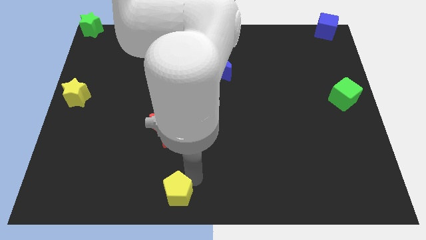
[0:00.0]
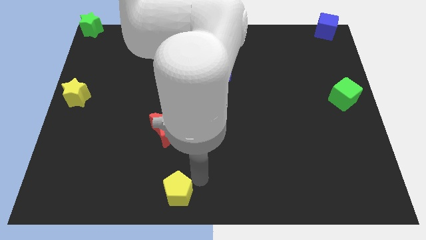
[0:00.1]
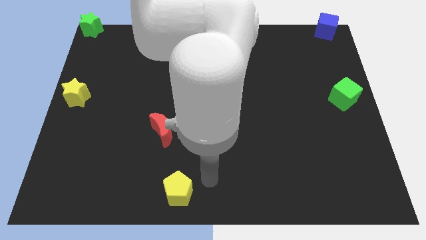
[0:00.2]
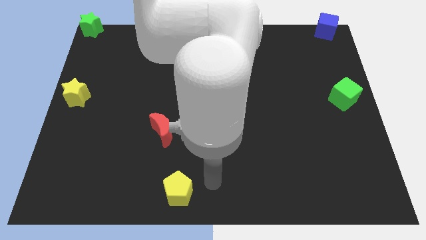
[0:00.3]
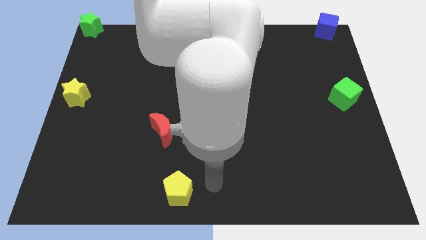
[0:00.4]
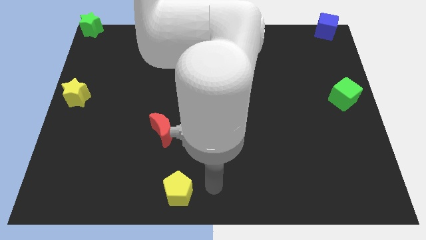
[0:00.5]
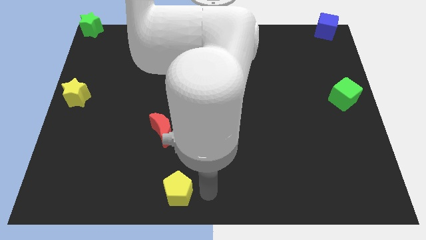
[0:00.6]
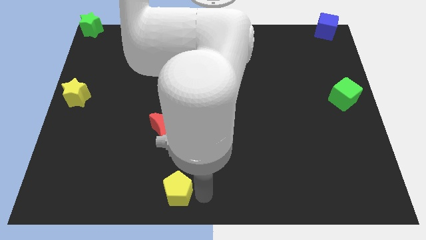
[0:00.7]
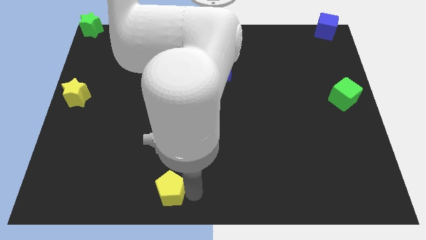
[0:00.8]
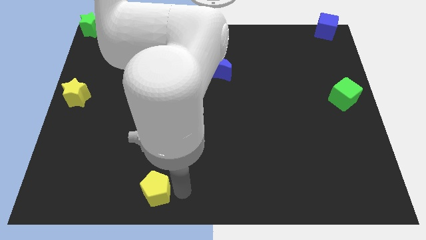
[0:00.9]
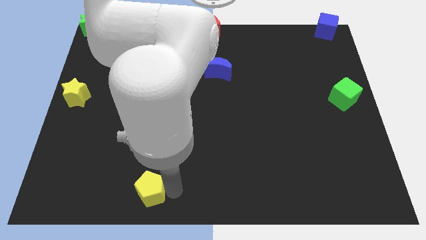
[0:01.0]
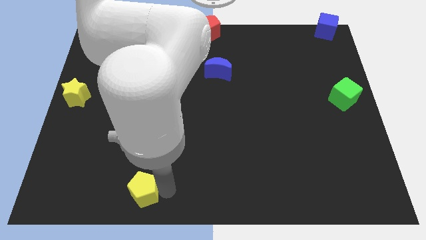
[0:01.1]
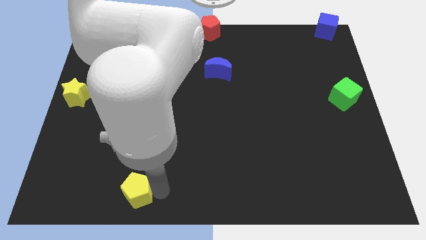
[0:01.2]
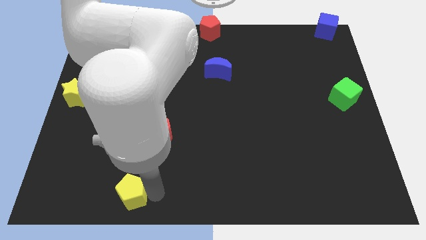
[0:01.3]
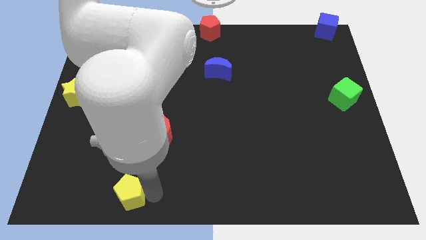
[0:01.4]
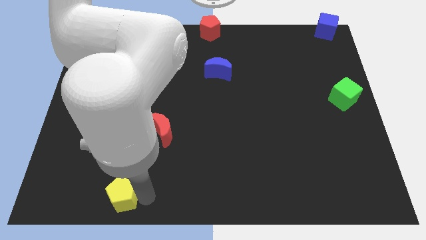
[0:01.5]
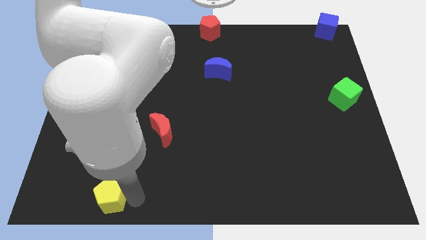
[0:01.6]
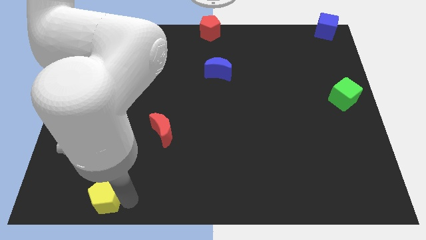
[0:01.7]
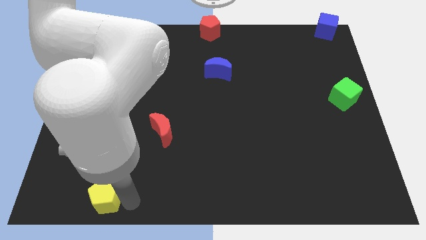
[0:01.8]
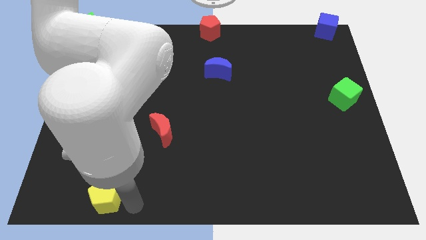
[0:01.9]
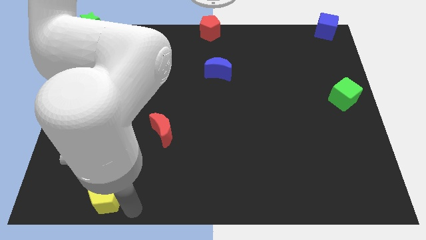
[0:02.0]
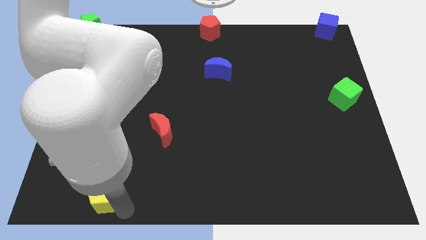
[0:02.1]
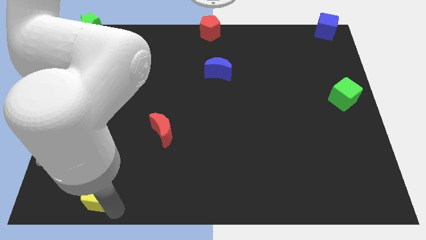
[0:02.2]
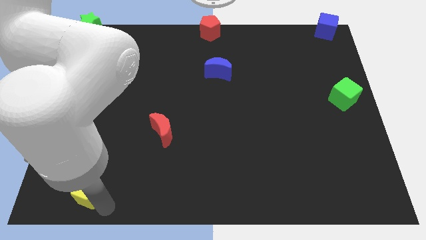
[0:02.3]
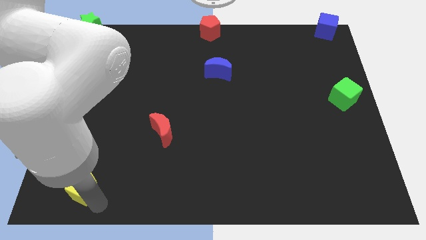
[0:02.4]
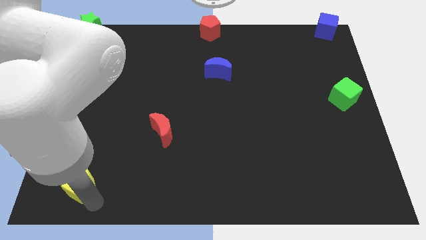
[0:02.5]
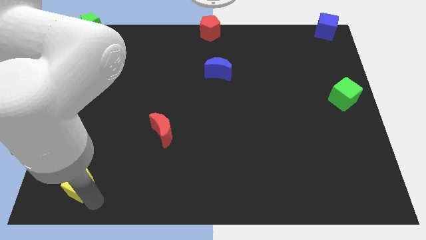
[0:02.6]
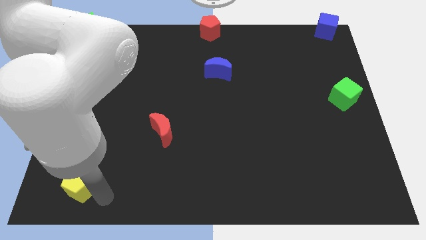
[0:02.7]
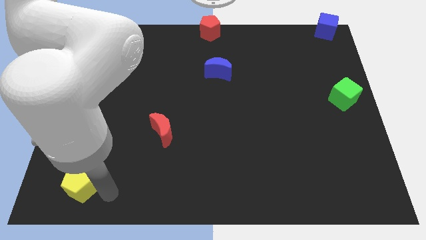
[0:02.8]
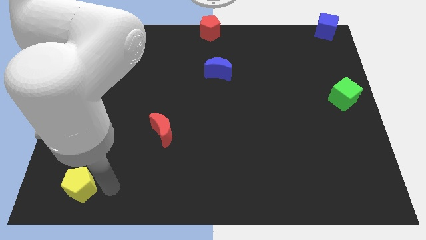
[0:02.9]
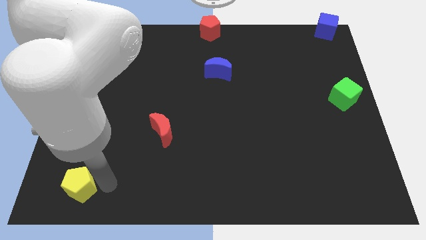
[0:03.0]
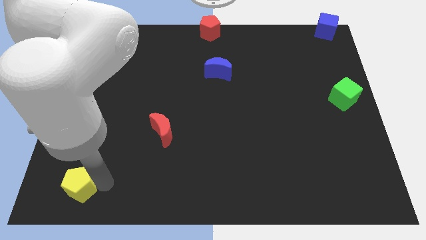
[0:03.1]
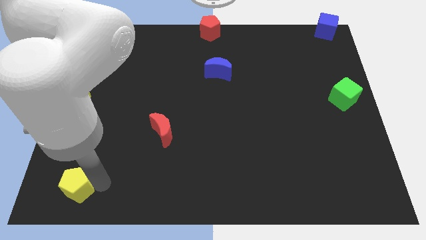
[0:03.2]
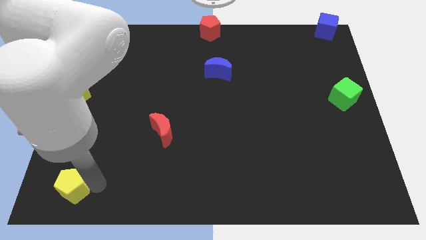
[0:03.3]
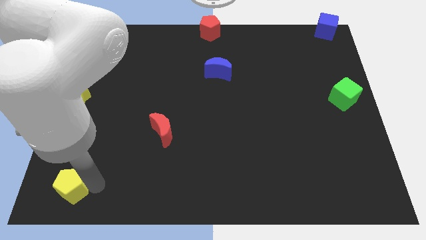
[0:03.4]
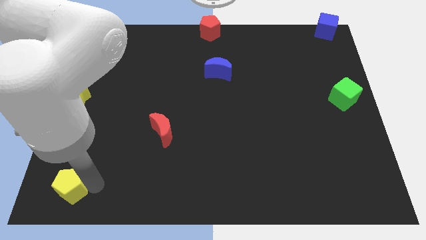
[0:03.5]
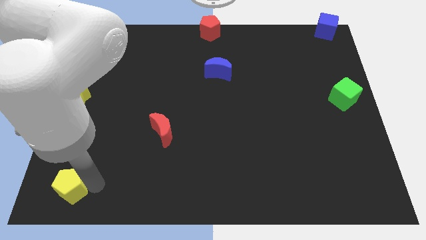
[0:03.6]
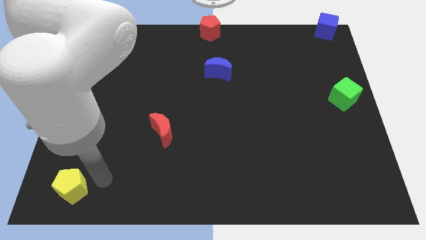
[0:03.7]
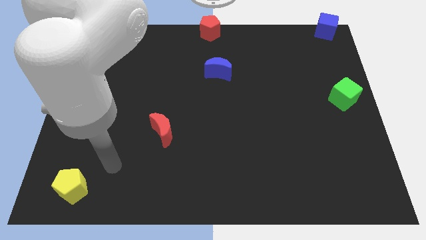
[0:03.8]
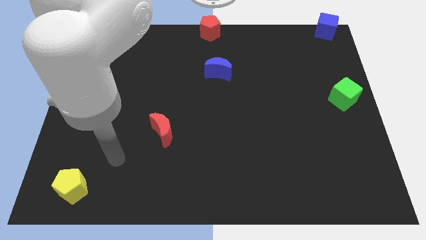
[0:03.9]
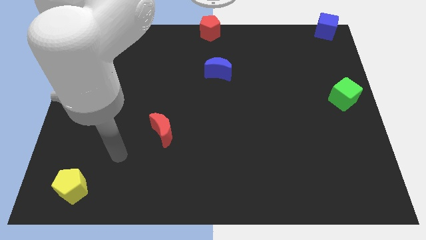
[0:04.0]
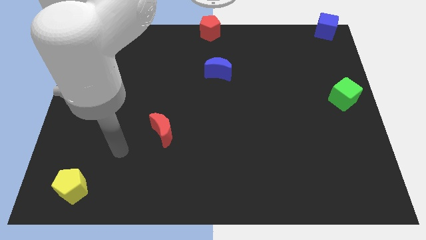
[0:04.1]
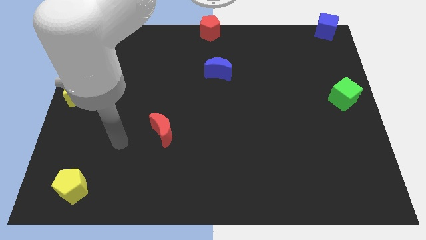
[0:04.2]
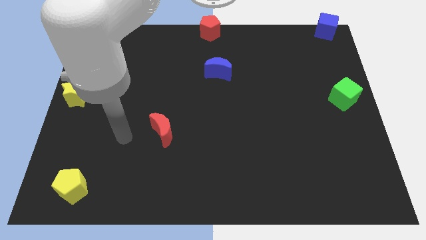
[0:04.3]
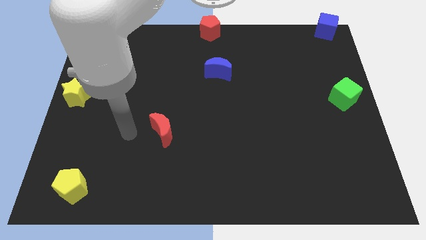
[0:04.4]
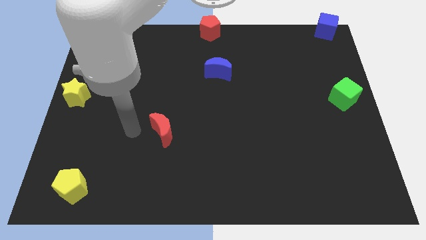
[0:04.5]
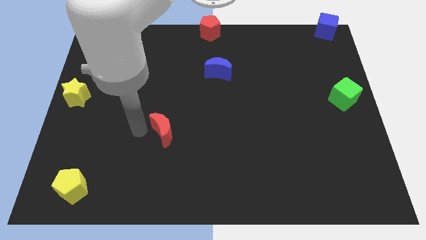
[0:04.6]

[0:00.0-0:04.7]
place the yellow pentagon to the bottom left of the board

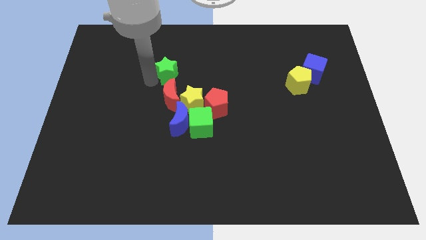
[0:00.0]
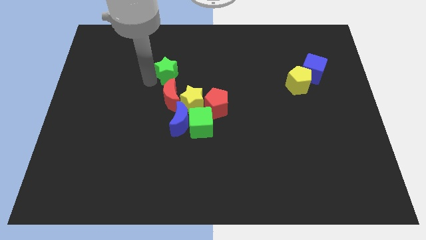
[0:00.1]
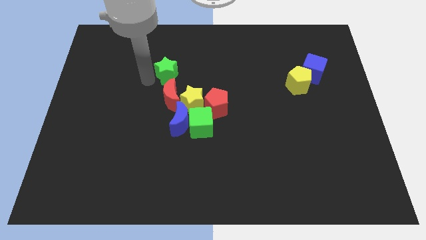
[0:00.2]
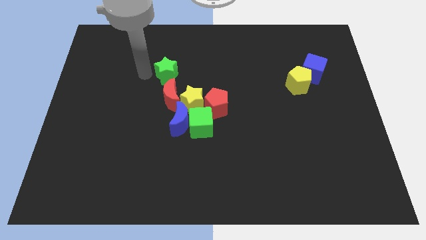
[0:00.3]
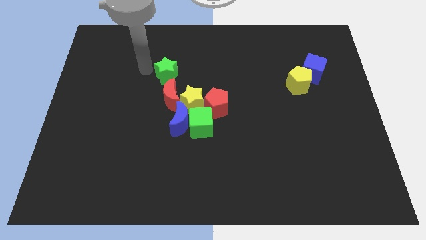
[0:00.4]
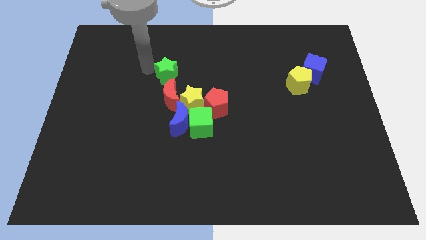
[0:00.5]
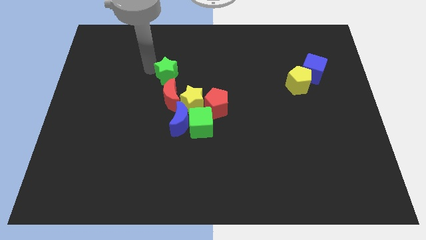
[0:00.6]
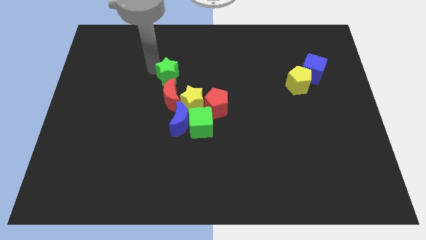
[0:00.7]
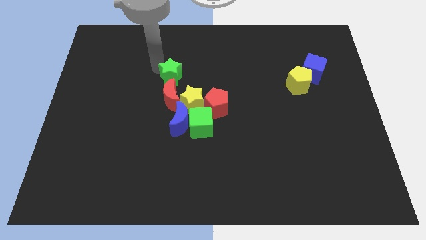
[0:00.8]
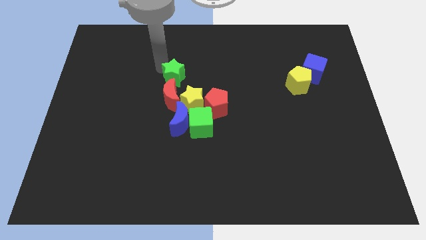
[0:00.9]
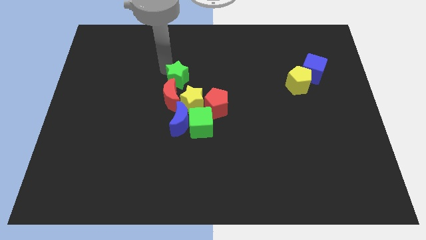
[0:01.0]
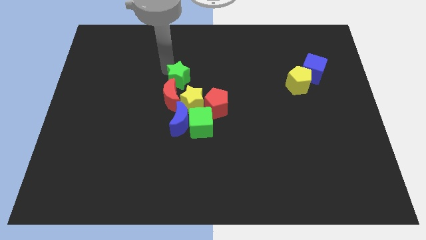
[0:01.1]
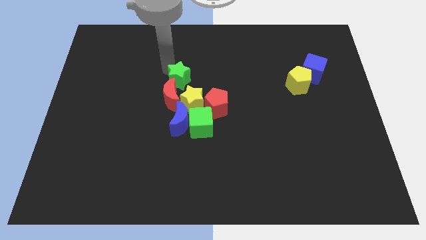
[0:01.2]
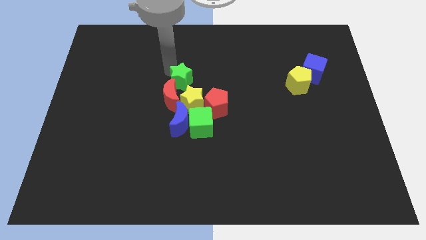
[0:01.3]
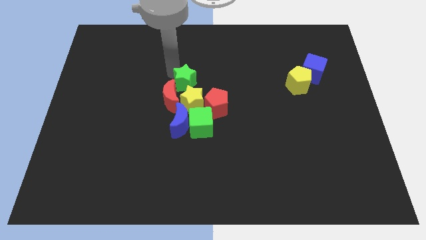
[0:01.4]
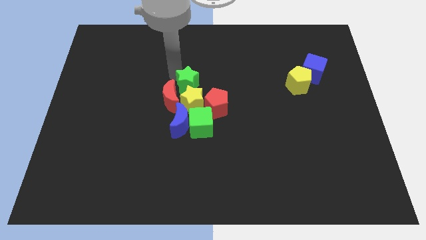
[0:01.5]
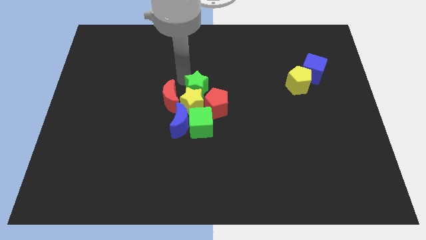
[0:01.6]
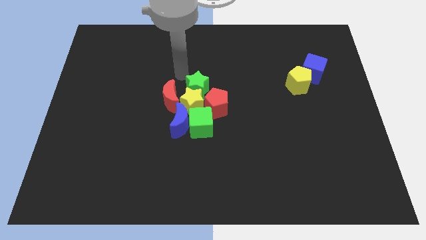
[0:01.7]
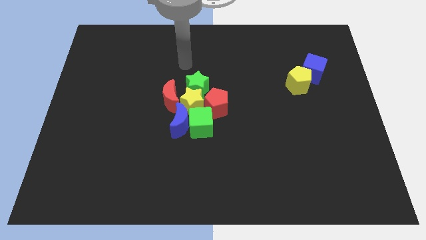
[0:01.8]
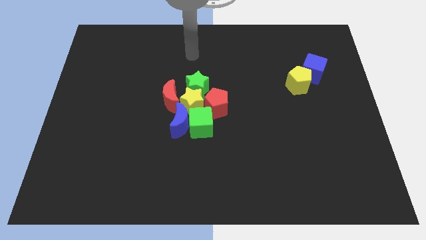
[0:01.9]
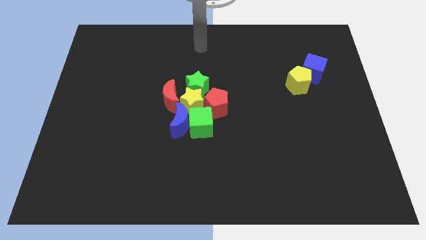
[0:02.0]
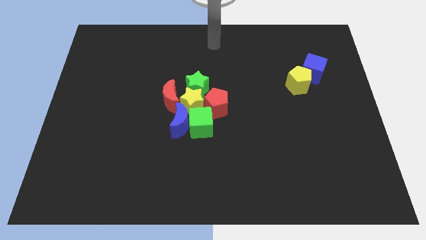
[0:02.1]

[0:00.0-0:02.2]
push the green star into yellow star

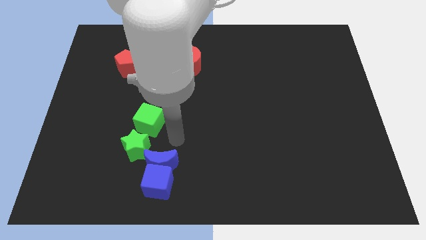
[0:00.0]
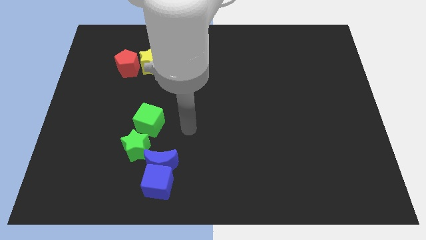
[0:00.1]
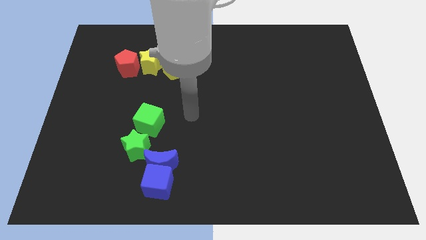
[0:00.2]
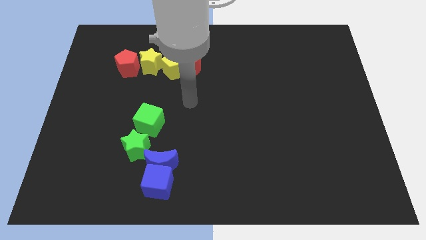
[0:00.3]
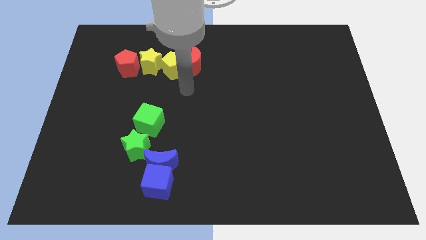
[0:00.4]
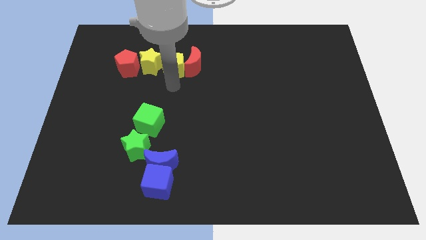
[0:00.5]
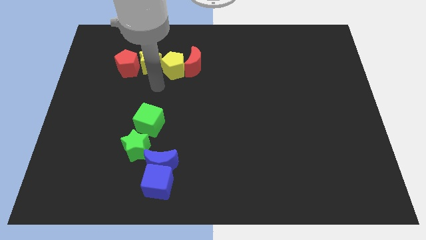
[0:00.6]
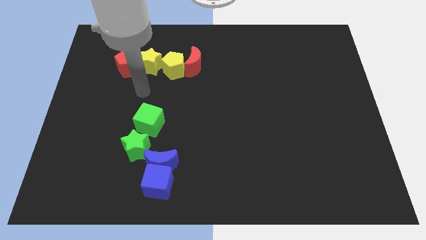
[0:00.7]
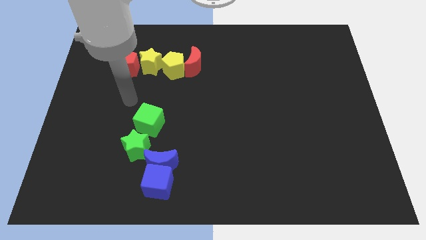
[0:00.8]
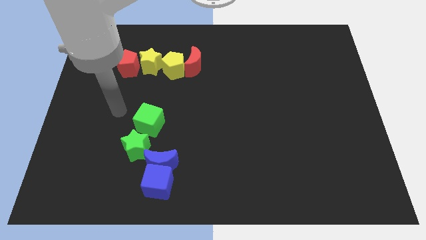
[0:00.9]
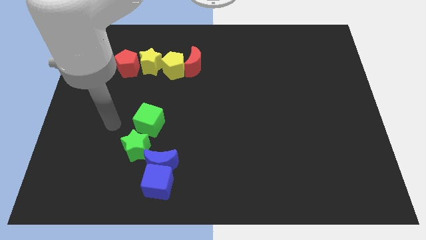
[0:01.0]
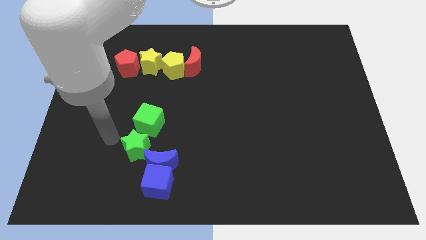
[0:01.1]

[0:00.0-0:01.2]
move your arm to the left of the green cube

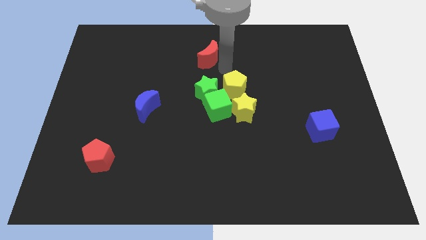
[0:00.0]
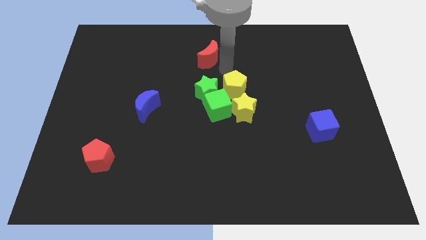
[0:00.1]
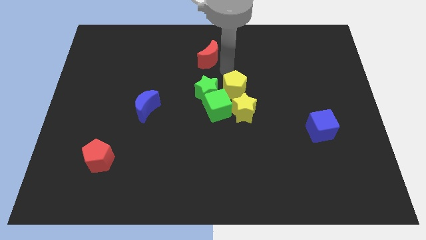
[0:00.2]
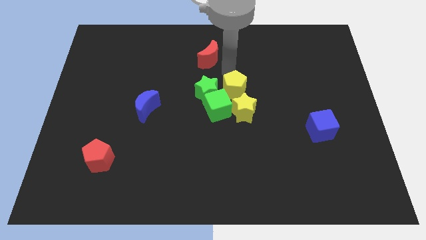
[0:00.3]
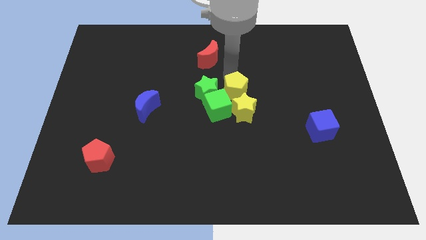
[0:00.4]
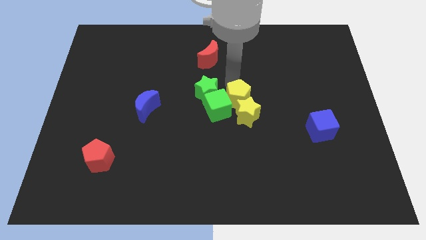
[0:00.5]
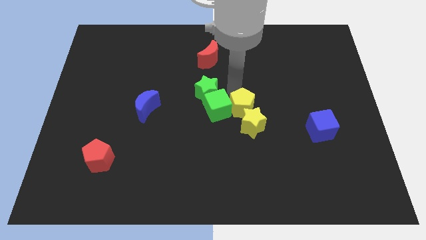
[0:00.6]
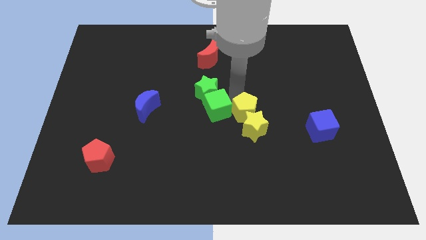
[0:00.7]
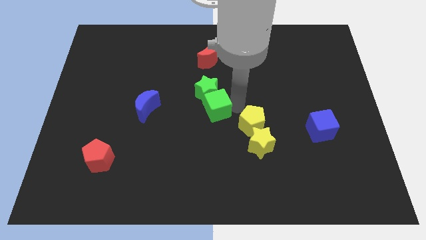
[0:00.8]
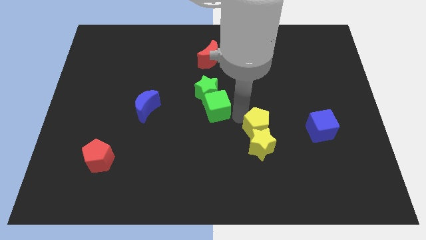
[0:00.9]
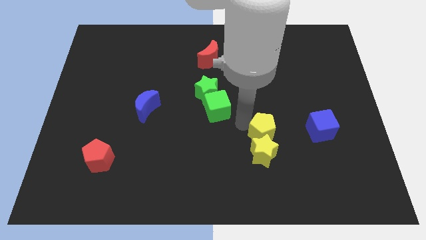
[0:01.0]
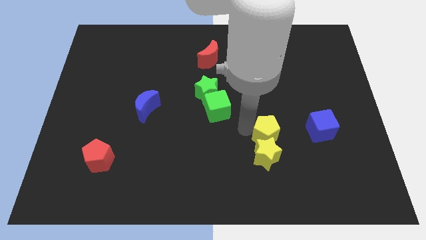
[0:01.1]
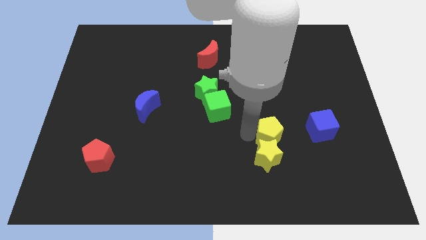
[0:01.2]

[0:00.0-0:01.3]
push the yellow pentagon downwards slightly
